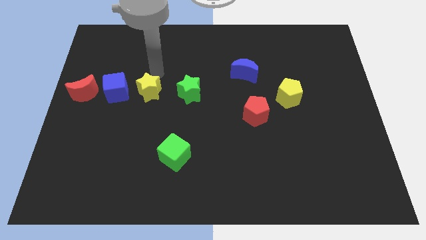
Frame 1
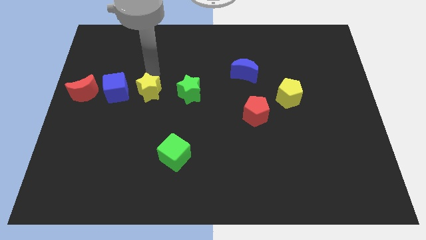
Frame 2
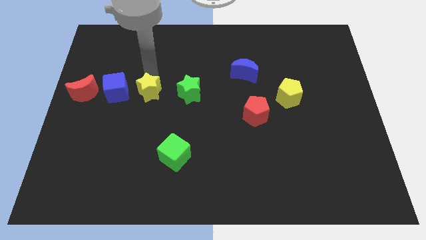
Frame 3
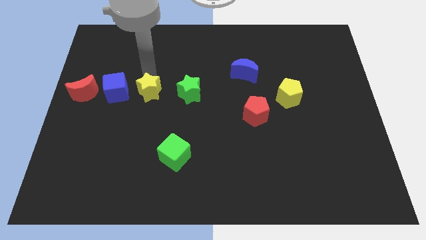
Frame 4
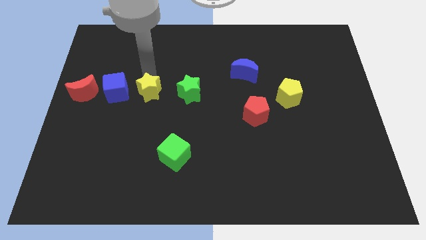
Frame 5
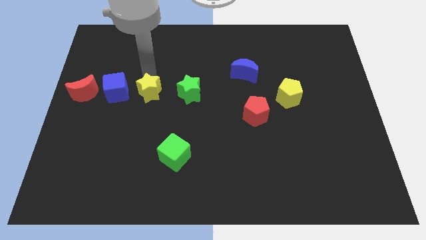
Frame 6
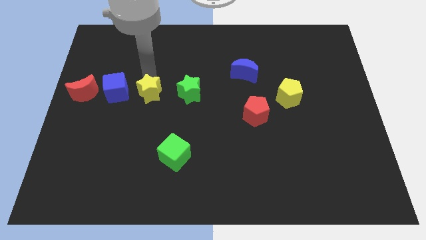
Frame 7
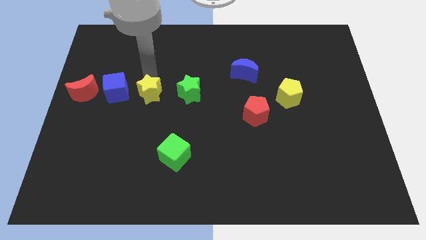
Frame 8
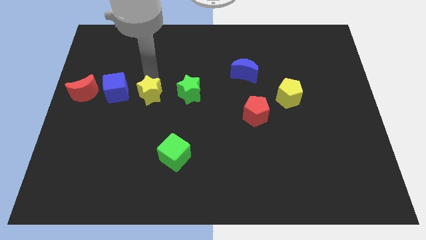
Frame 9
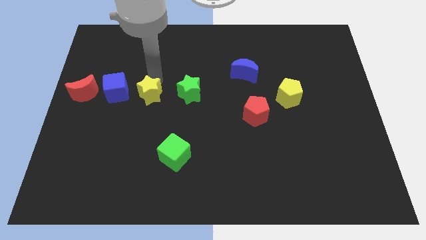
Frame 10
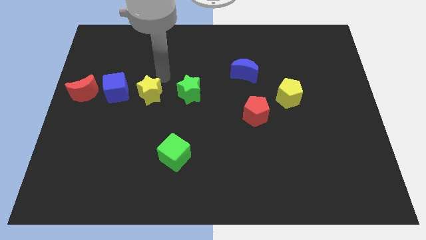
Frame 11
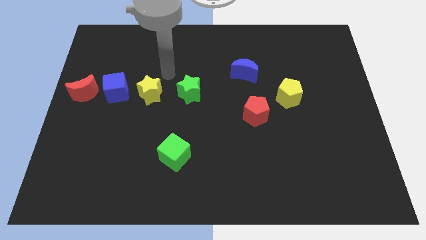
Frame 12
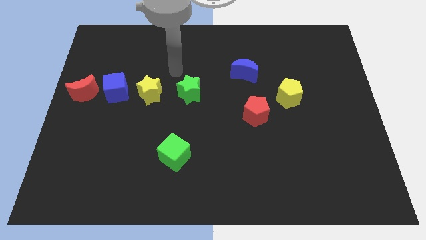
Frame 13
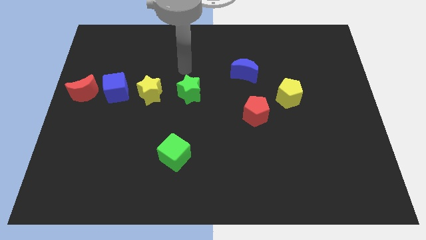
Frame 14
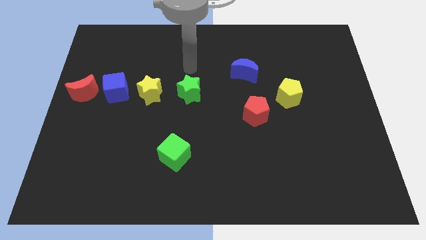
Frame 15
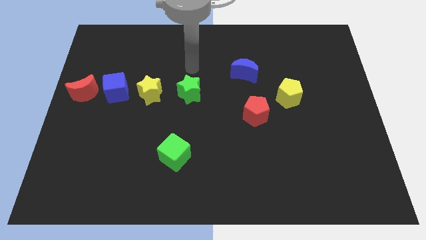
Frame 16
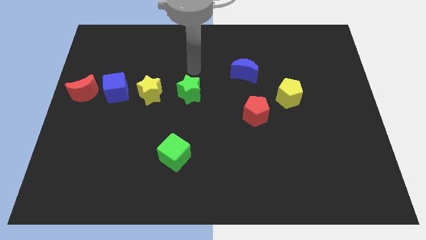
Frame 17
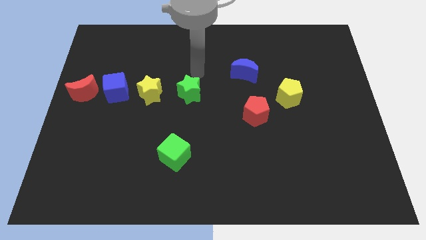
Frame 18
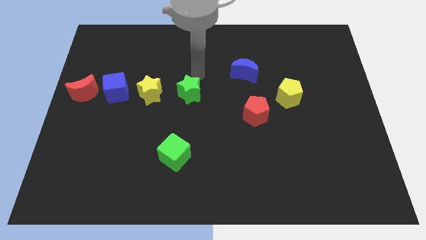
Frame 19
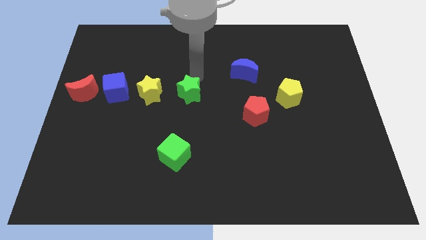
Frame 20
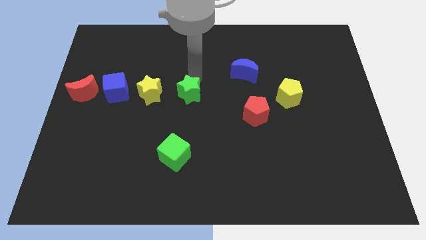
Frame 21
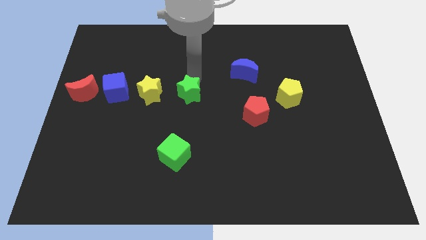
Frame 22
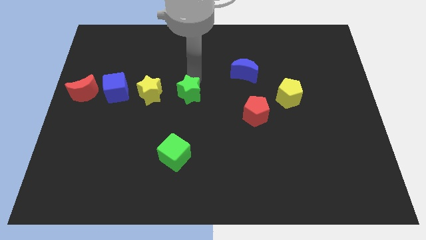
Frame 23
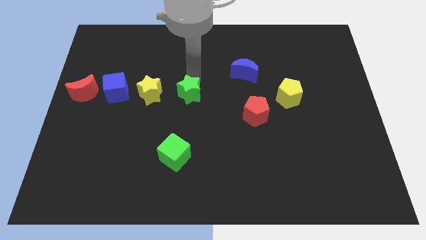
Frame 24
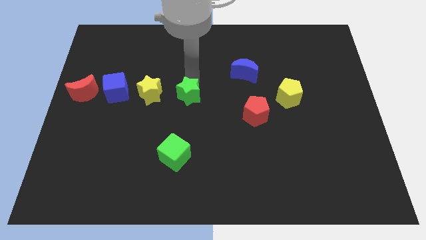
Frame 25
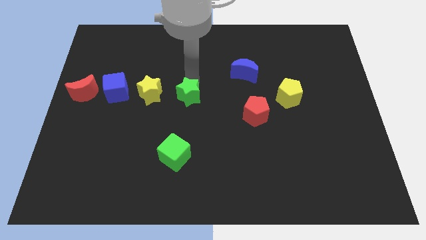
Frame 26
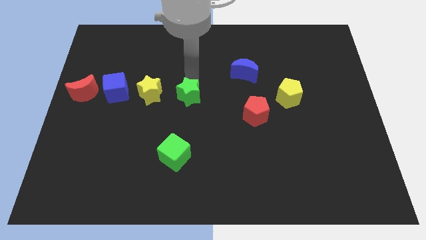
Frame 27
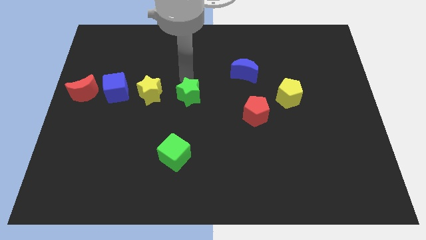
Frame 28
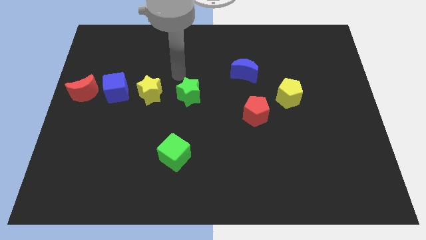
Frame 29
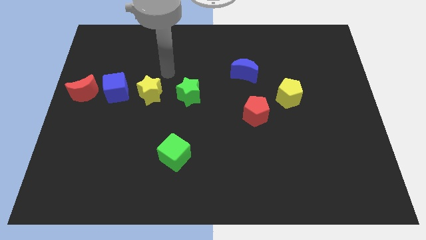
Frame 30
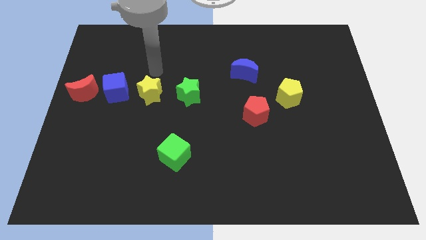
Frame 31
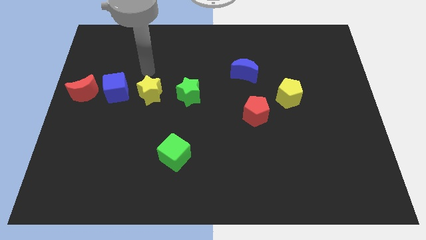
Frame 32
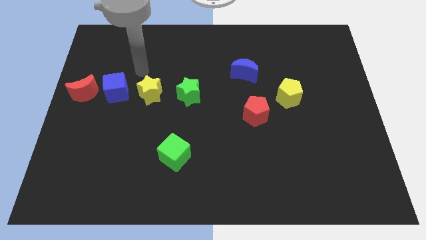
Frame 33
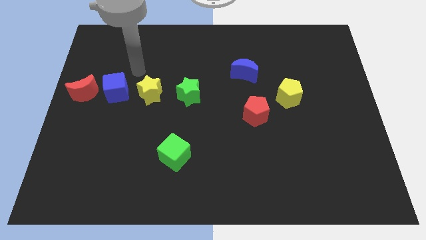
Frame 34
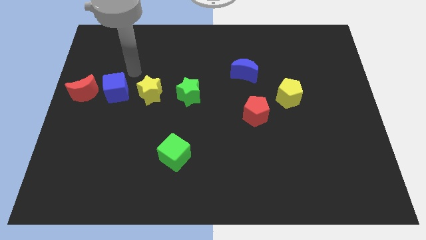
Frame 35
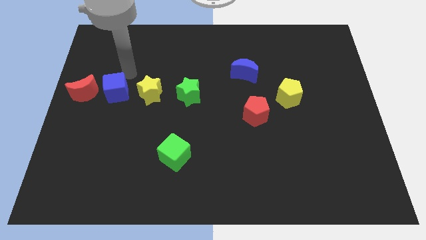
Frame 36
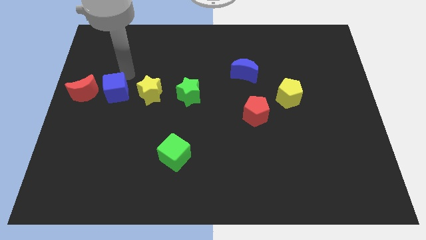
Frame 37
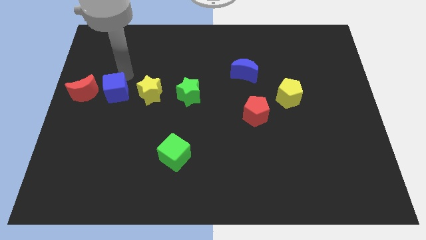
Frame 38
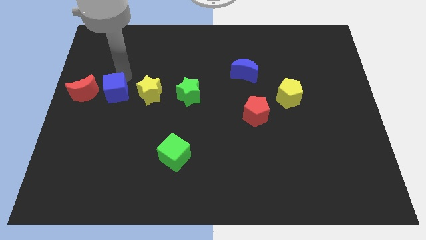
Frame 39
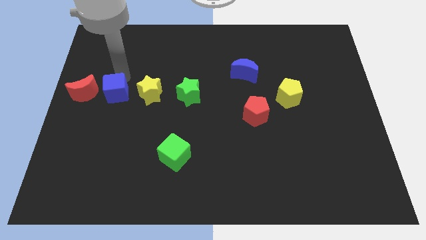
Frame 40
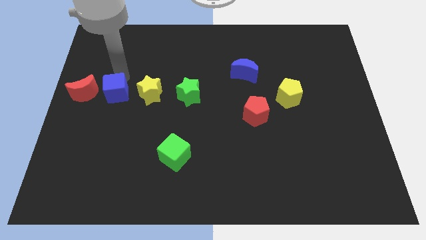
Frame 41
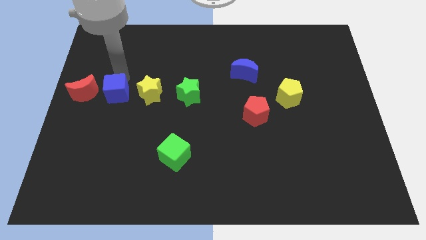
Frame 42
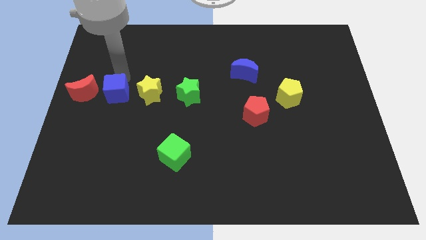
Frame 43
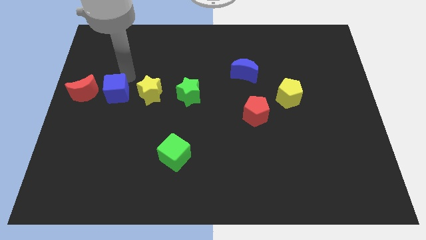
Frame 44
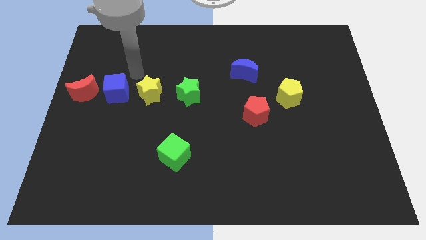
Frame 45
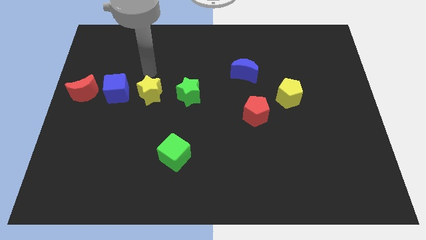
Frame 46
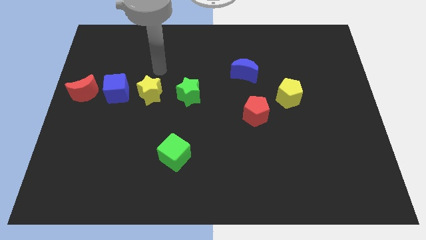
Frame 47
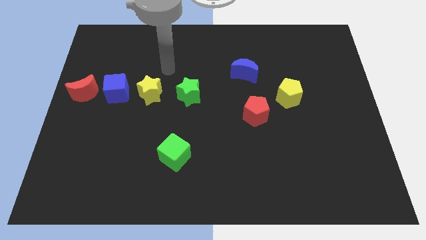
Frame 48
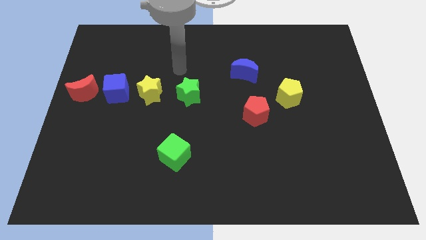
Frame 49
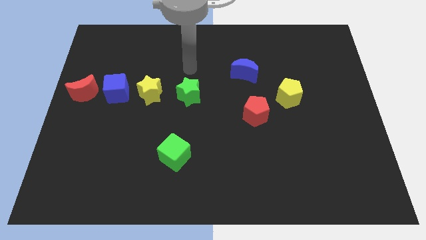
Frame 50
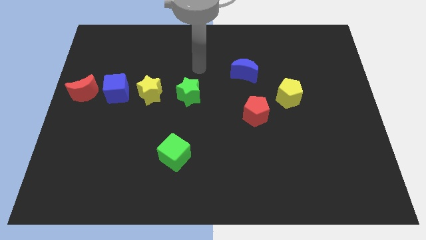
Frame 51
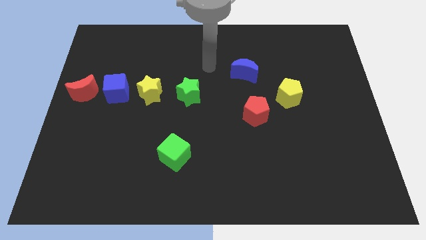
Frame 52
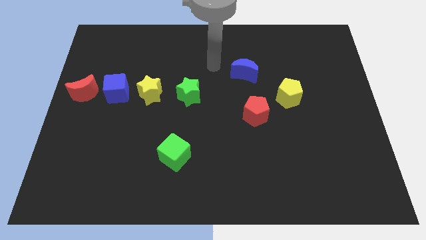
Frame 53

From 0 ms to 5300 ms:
adjust the green and yellow star and blue cube in a horizontal line

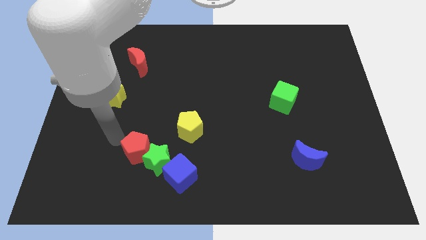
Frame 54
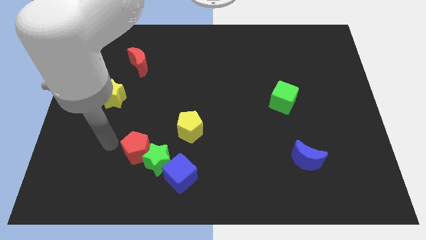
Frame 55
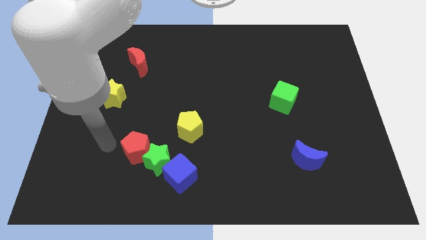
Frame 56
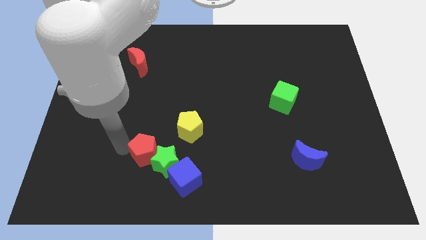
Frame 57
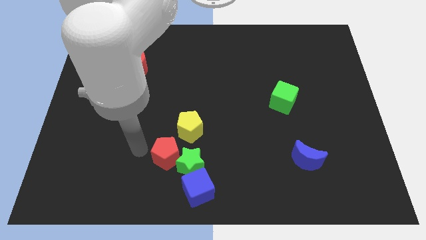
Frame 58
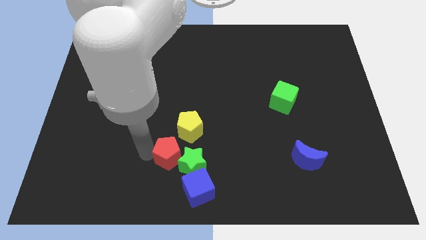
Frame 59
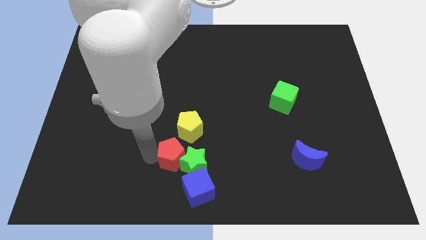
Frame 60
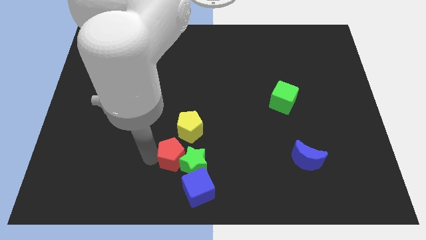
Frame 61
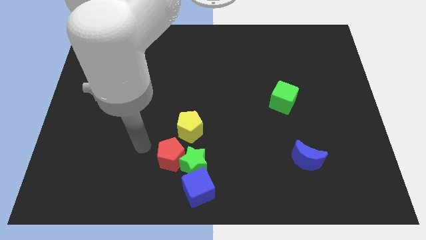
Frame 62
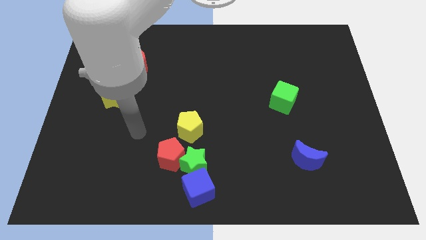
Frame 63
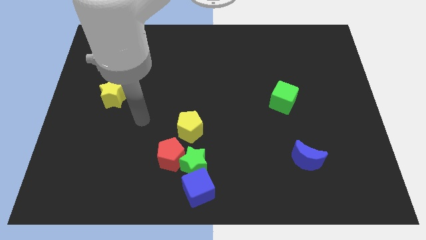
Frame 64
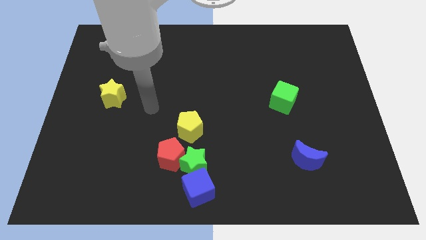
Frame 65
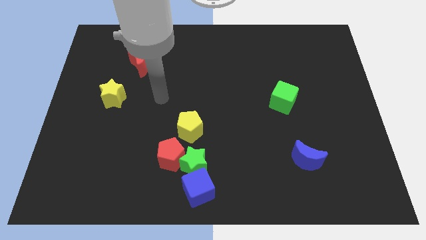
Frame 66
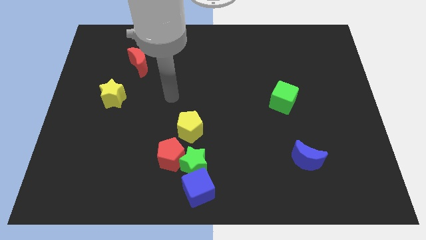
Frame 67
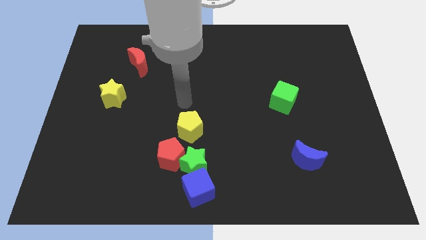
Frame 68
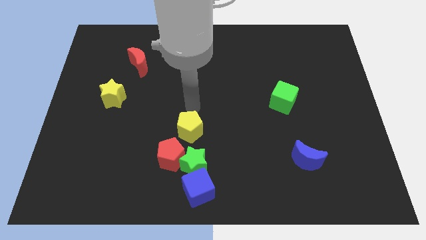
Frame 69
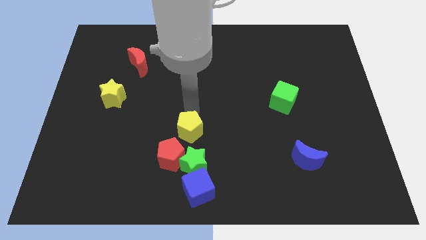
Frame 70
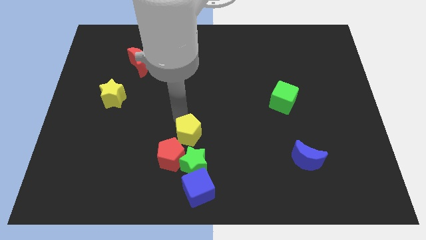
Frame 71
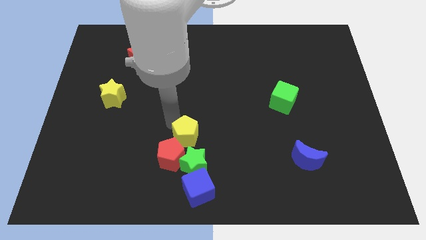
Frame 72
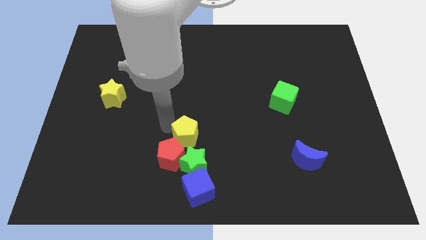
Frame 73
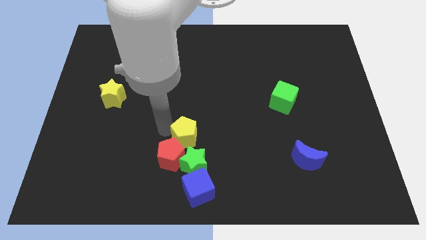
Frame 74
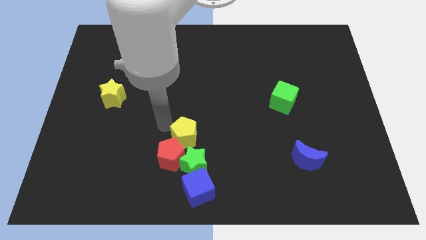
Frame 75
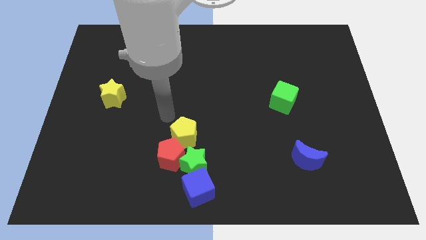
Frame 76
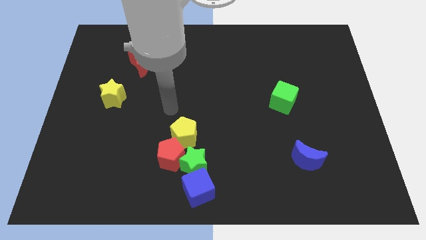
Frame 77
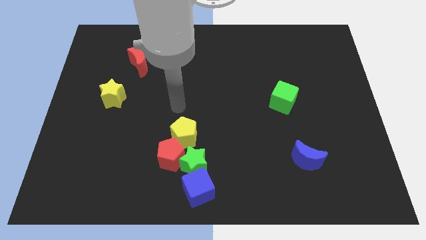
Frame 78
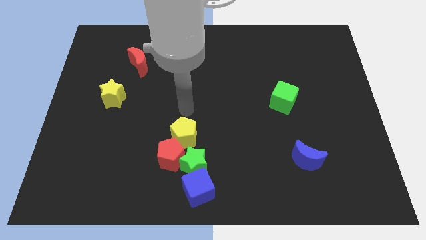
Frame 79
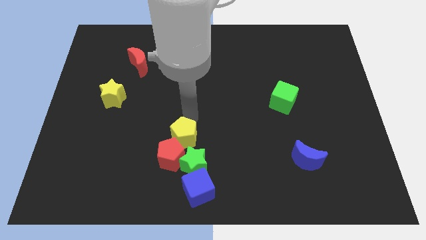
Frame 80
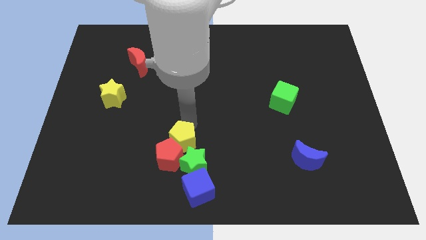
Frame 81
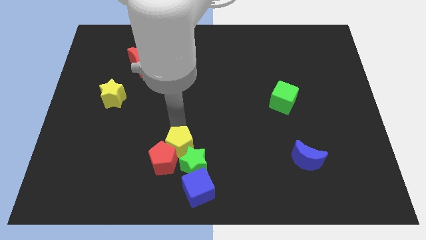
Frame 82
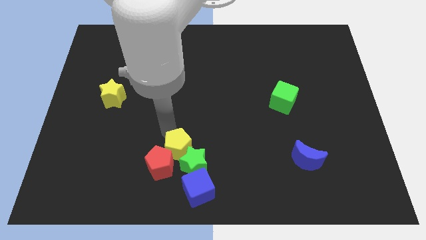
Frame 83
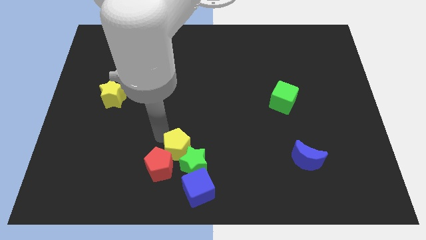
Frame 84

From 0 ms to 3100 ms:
move yellow pentagon close to the objects

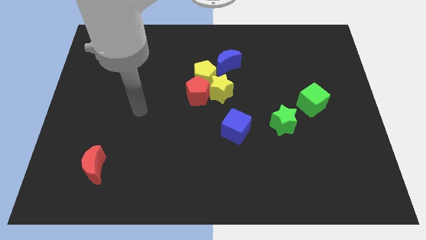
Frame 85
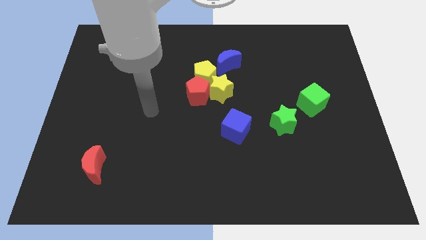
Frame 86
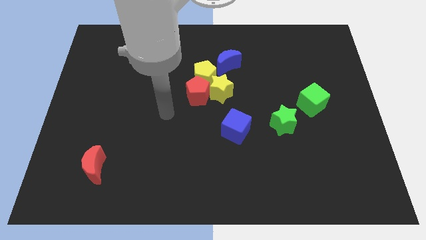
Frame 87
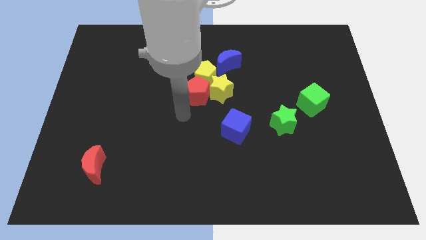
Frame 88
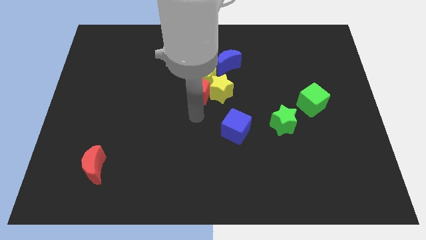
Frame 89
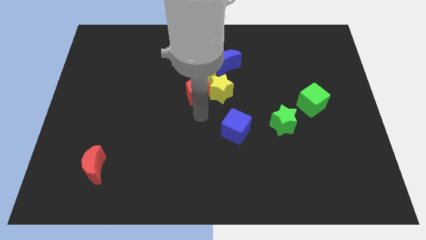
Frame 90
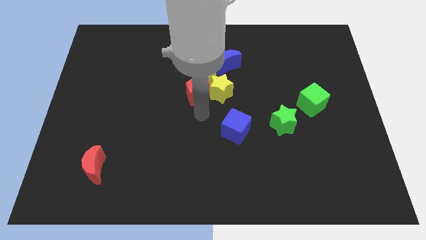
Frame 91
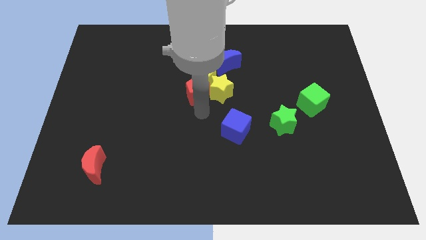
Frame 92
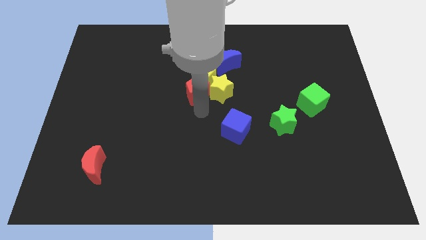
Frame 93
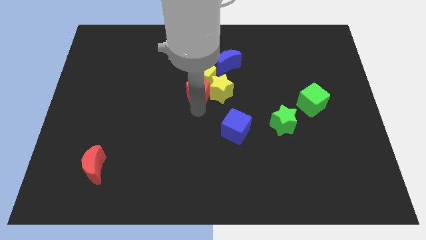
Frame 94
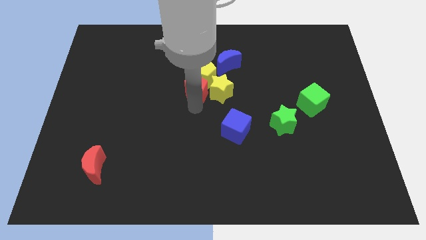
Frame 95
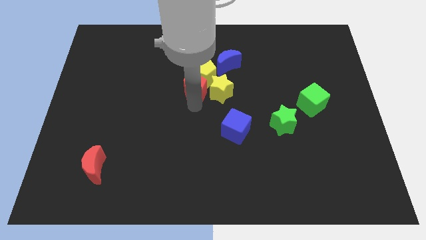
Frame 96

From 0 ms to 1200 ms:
move your arm towards red pentagon
